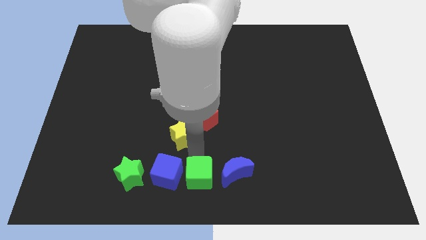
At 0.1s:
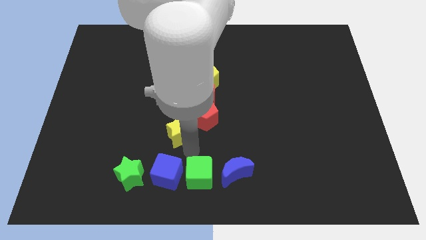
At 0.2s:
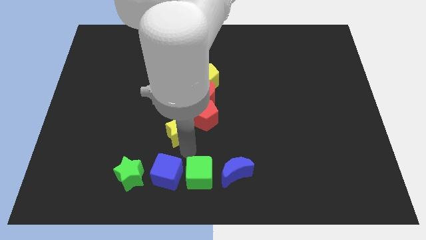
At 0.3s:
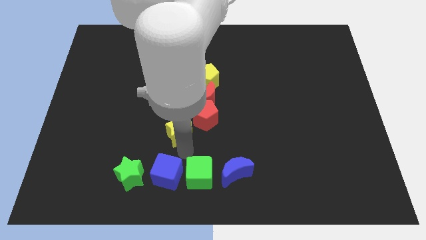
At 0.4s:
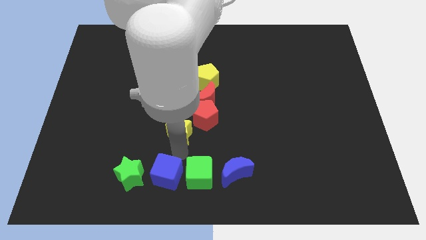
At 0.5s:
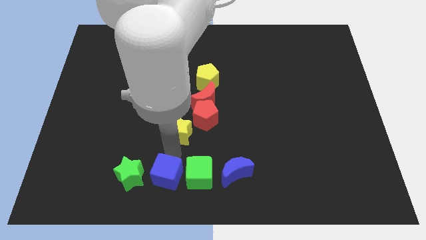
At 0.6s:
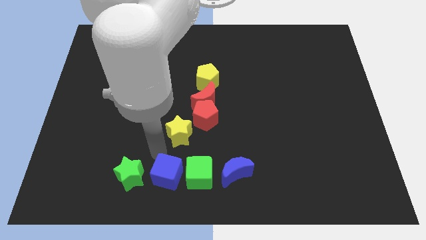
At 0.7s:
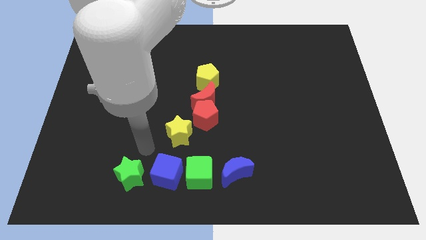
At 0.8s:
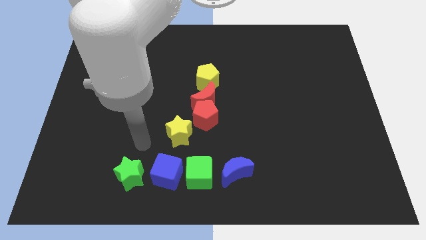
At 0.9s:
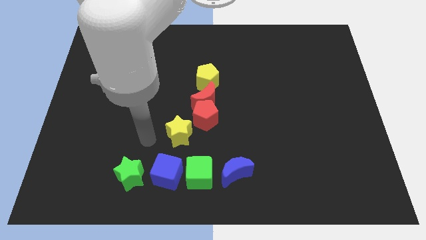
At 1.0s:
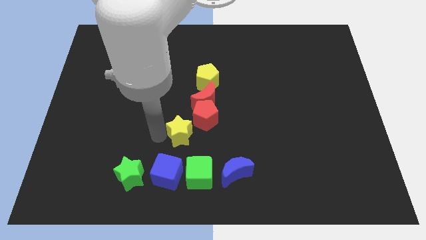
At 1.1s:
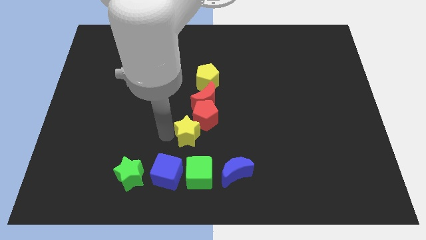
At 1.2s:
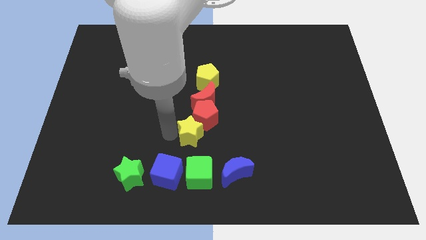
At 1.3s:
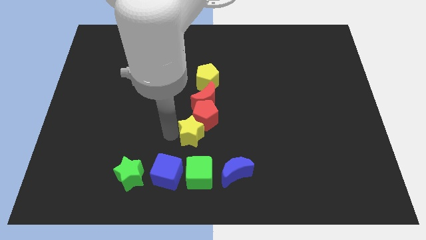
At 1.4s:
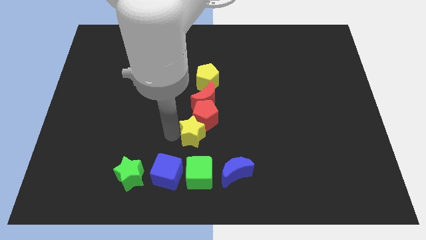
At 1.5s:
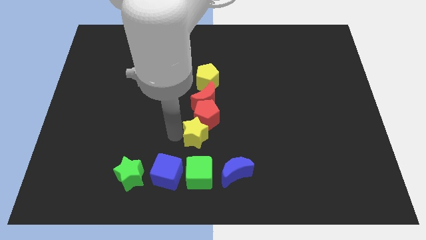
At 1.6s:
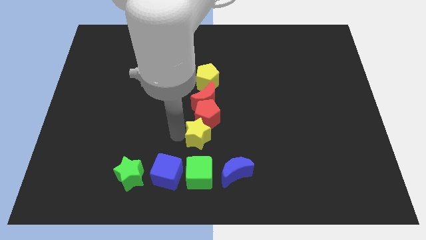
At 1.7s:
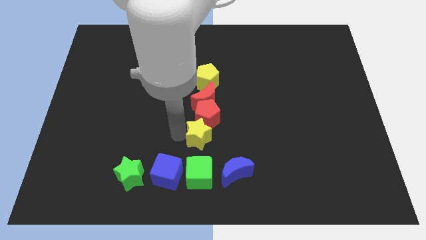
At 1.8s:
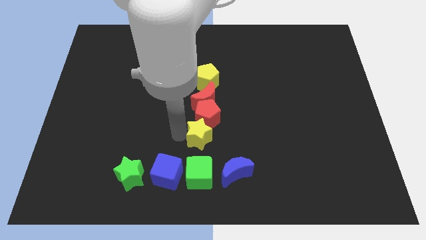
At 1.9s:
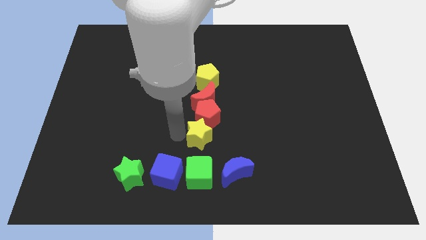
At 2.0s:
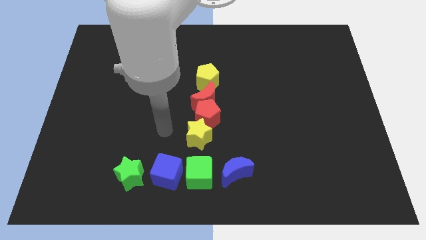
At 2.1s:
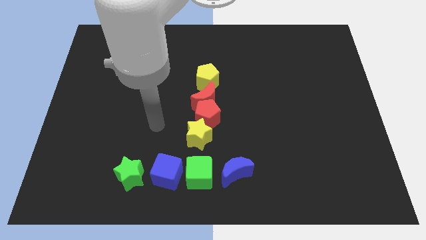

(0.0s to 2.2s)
push yellow star into red pentagon

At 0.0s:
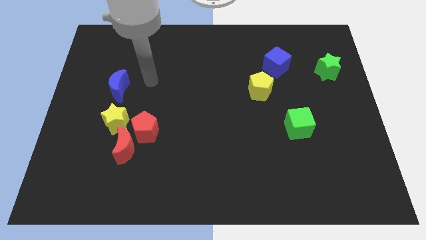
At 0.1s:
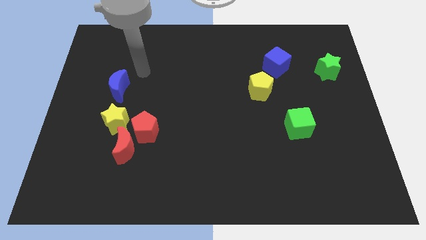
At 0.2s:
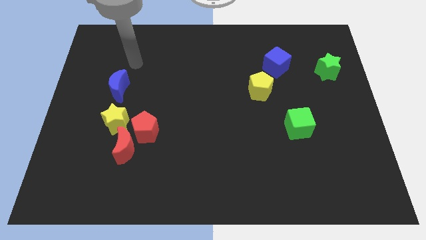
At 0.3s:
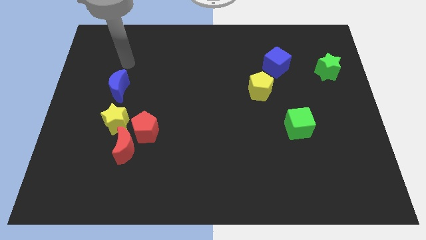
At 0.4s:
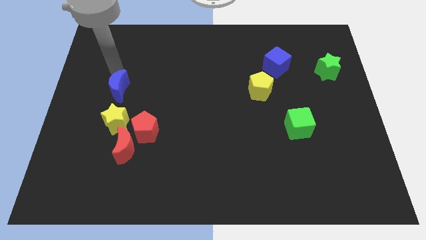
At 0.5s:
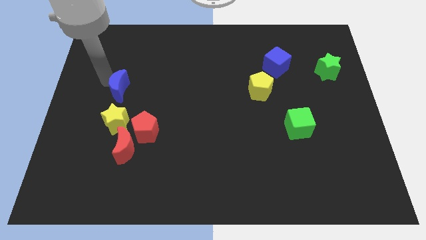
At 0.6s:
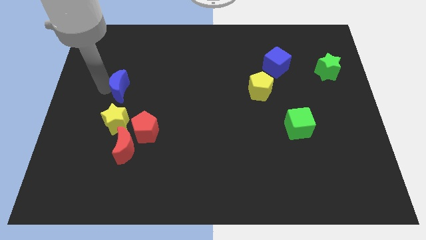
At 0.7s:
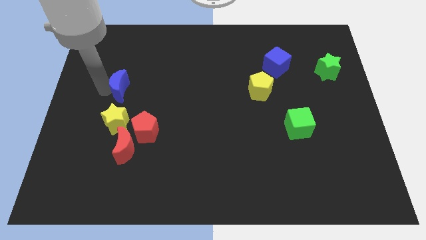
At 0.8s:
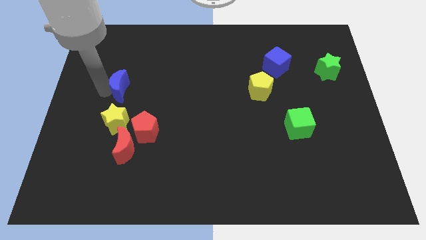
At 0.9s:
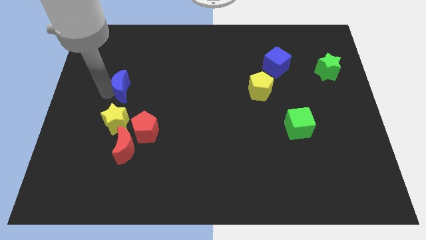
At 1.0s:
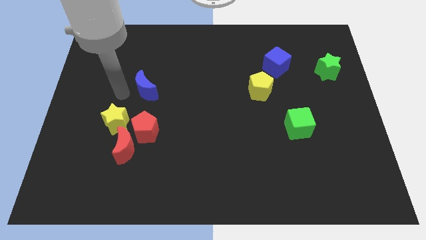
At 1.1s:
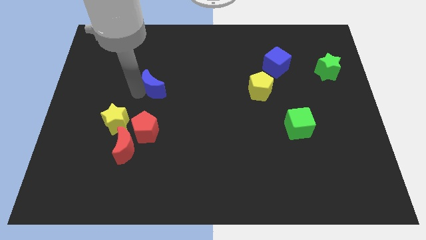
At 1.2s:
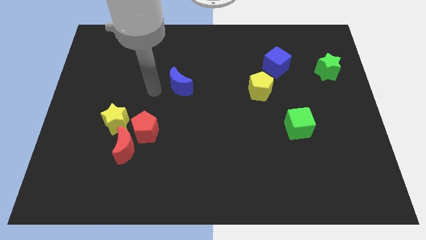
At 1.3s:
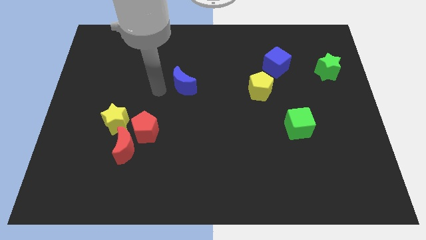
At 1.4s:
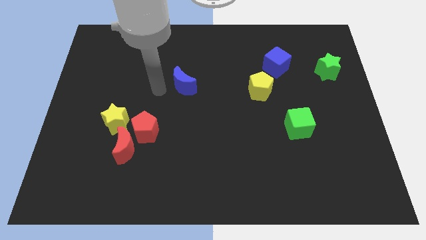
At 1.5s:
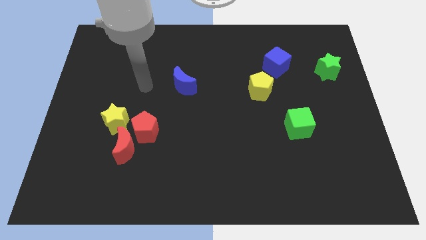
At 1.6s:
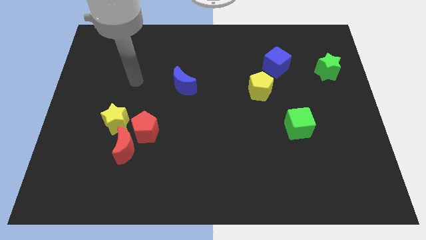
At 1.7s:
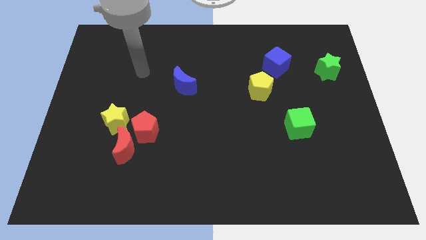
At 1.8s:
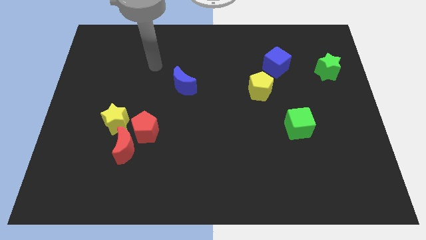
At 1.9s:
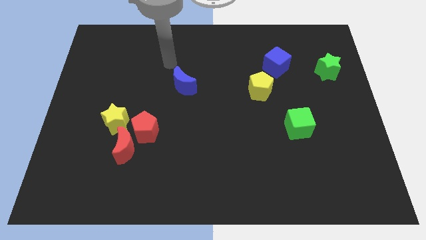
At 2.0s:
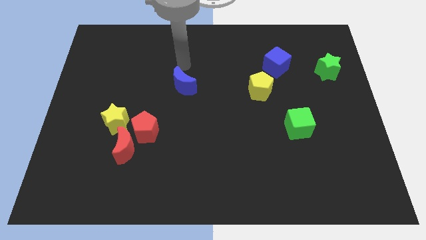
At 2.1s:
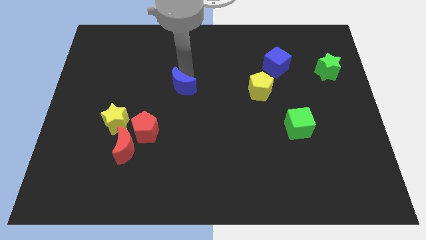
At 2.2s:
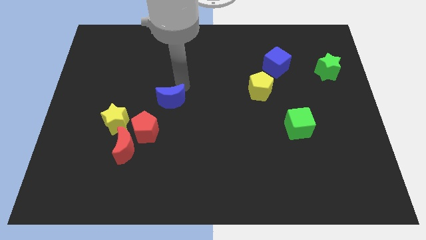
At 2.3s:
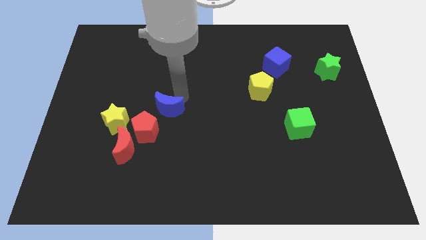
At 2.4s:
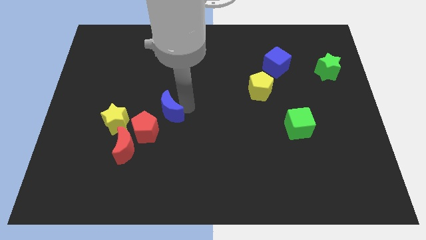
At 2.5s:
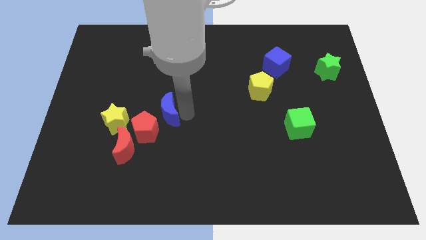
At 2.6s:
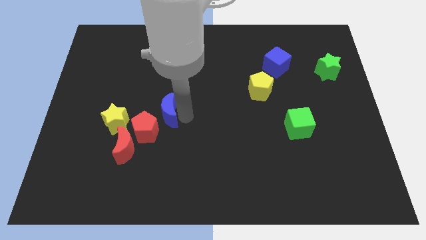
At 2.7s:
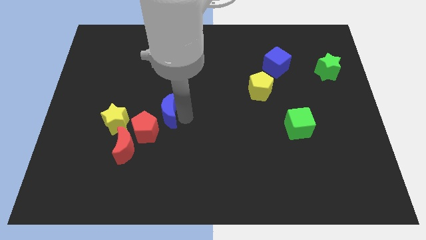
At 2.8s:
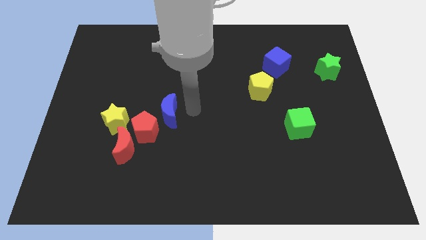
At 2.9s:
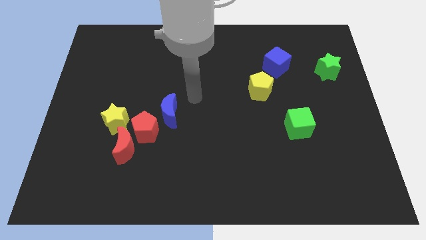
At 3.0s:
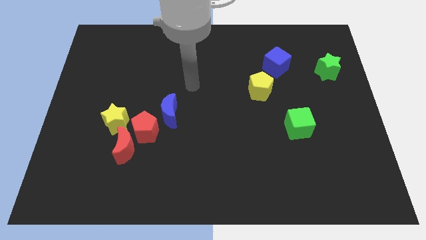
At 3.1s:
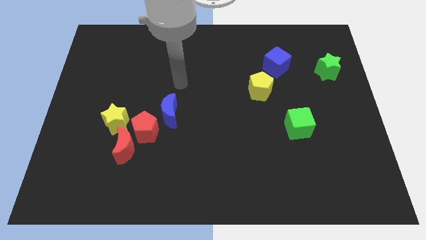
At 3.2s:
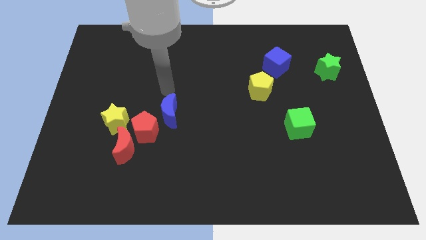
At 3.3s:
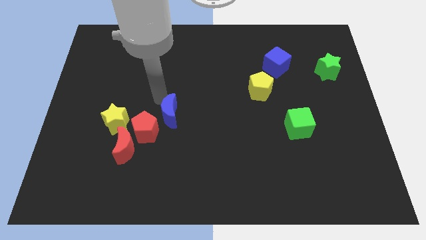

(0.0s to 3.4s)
move blue moon towards red pentagon

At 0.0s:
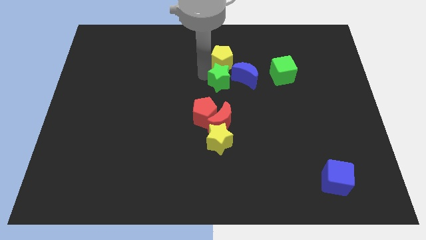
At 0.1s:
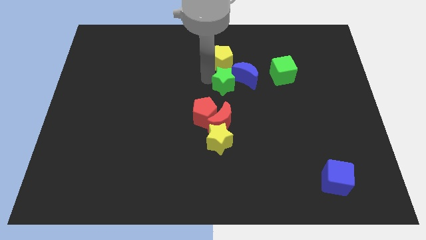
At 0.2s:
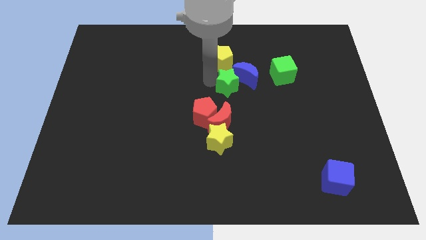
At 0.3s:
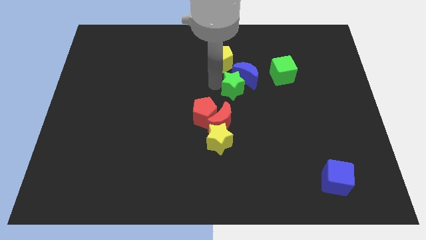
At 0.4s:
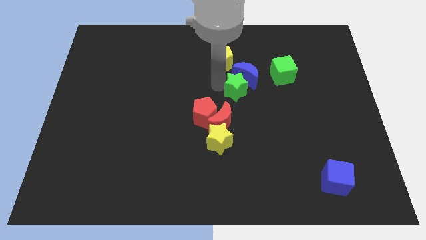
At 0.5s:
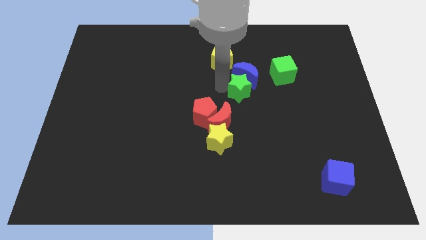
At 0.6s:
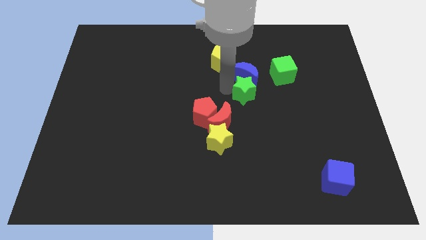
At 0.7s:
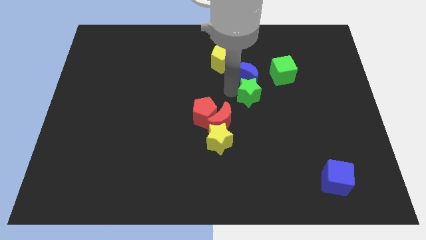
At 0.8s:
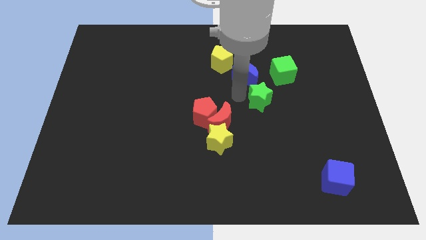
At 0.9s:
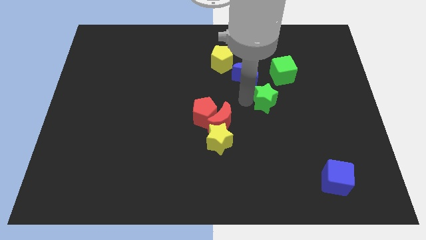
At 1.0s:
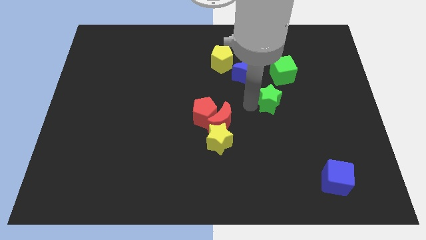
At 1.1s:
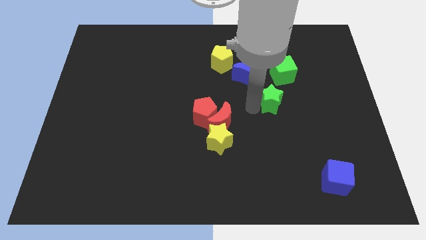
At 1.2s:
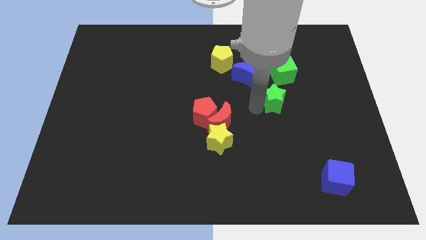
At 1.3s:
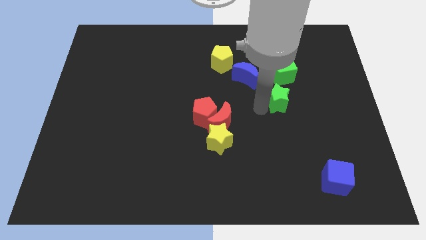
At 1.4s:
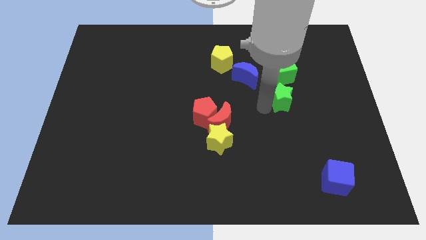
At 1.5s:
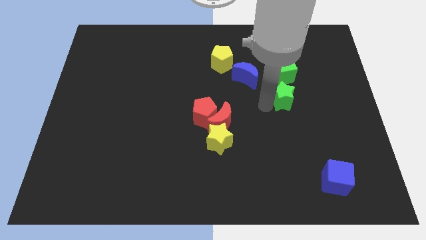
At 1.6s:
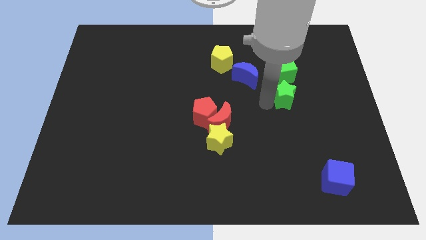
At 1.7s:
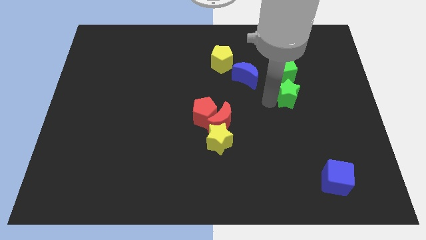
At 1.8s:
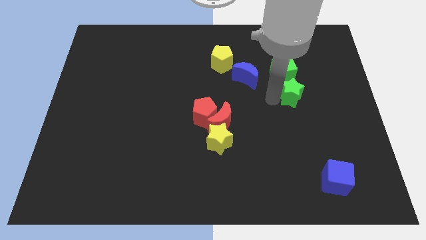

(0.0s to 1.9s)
move the green star below to the green cube

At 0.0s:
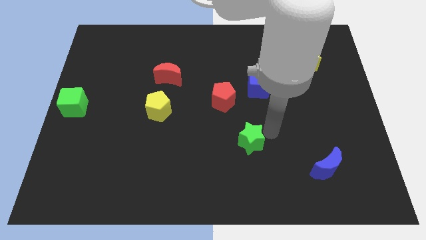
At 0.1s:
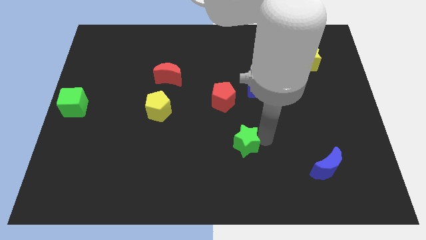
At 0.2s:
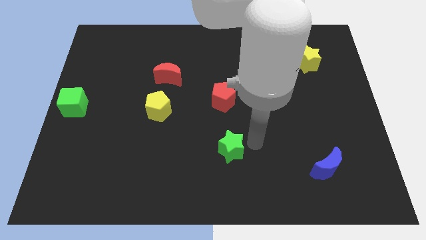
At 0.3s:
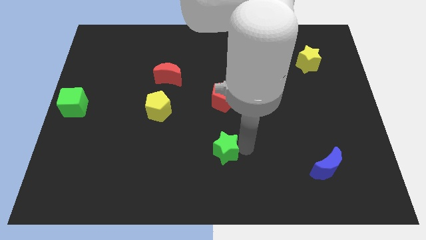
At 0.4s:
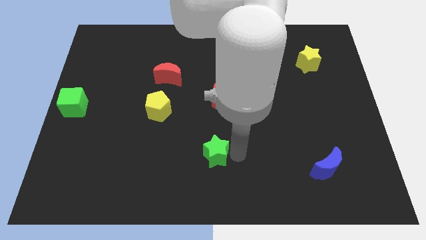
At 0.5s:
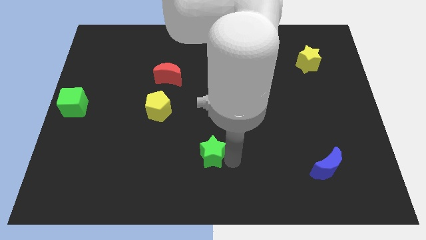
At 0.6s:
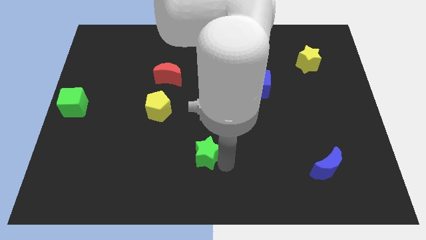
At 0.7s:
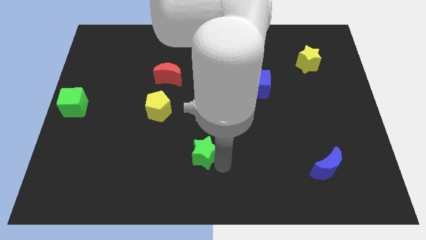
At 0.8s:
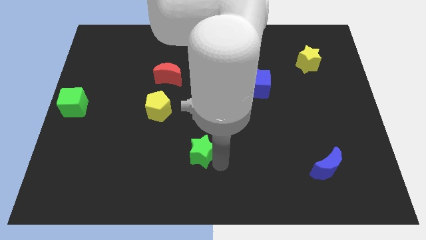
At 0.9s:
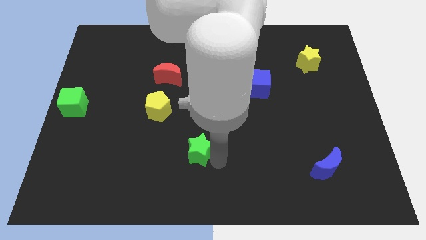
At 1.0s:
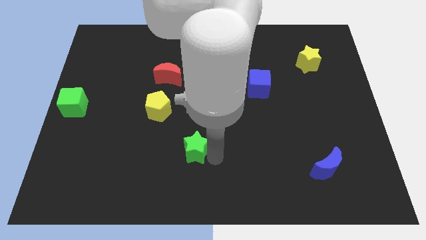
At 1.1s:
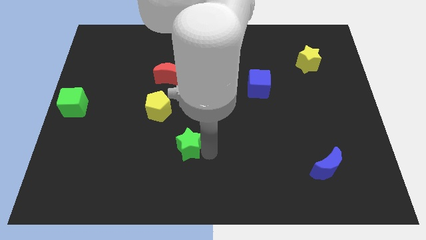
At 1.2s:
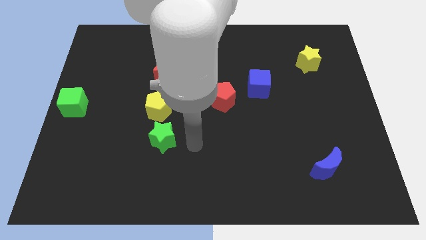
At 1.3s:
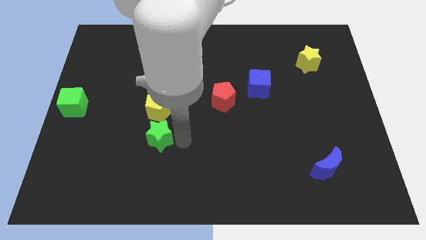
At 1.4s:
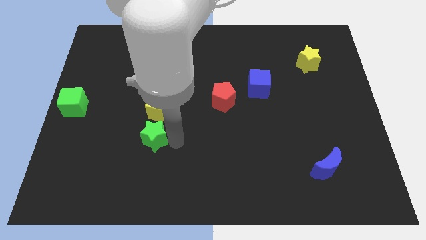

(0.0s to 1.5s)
place the green star below the yellow pentagon
